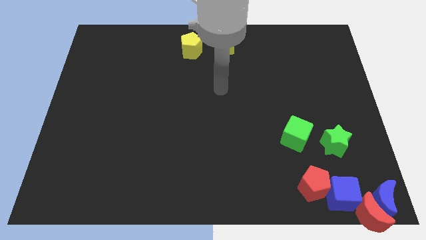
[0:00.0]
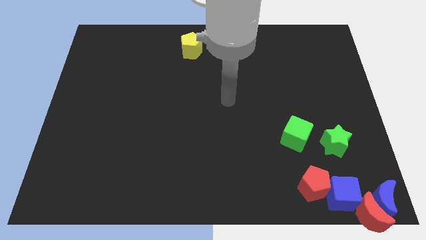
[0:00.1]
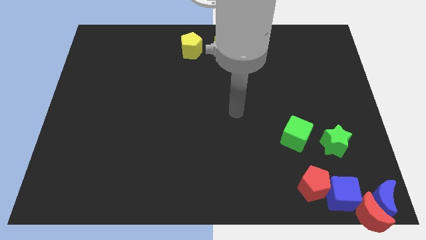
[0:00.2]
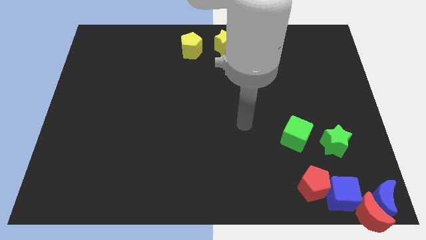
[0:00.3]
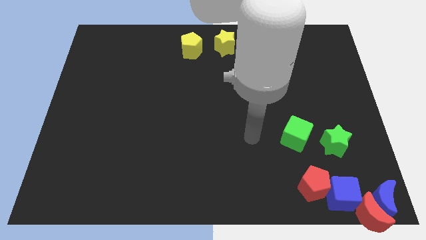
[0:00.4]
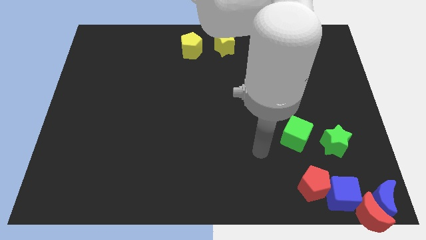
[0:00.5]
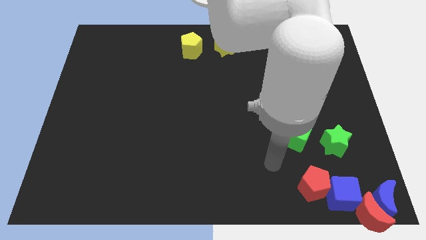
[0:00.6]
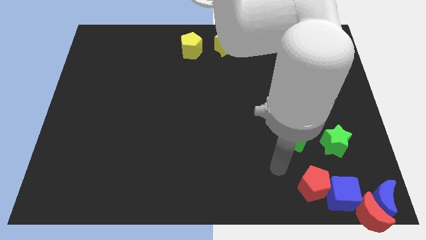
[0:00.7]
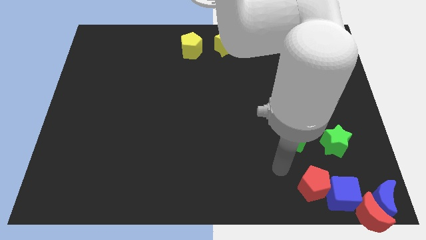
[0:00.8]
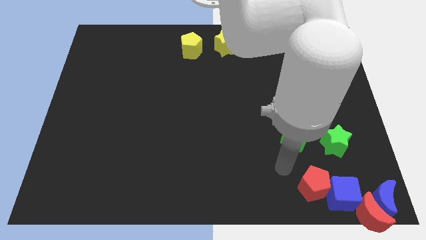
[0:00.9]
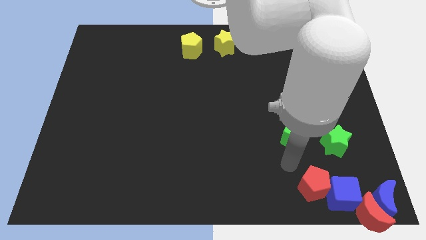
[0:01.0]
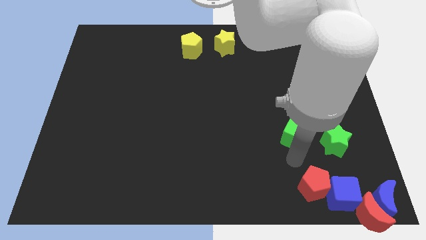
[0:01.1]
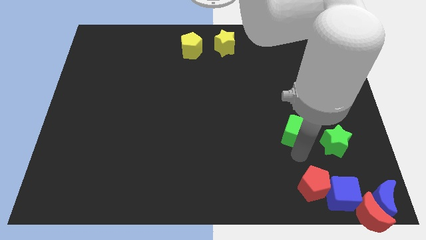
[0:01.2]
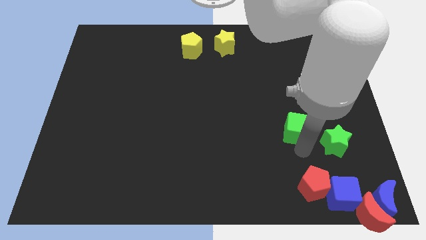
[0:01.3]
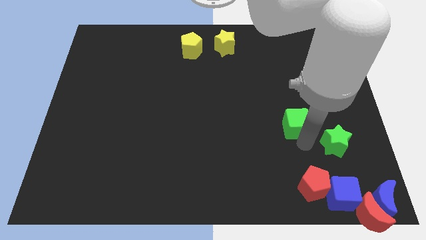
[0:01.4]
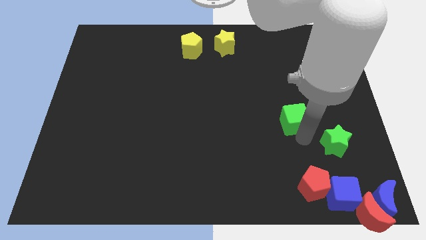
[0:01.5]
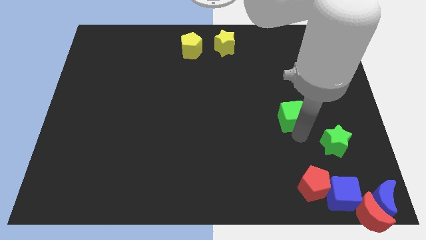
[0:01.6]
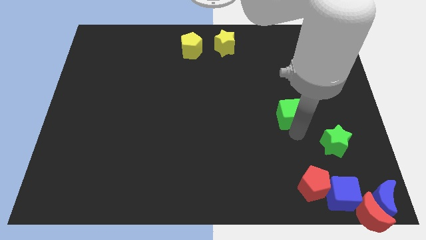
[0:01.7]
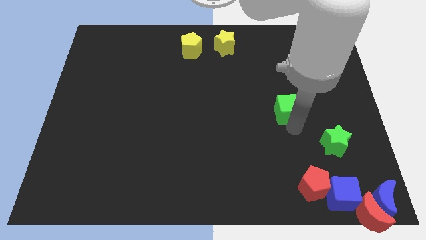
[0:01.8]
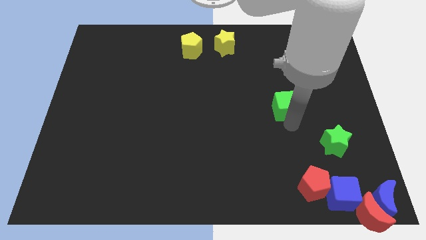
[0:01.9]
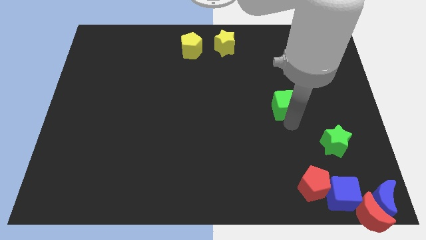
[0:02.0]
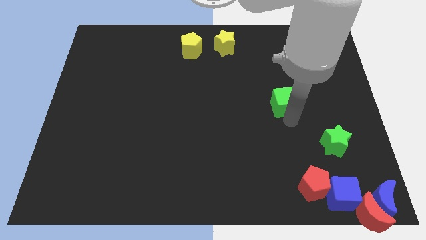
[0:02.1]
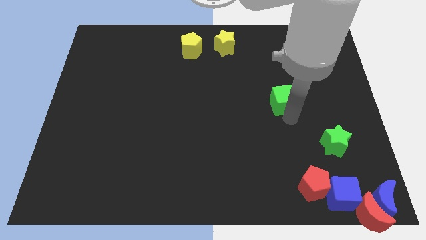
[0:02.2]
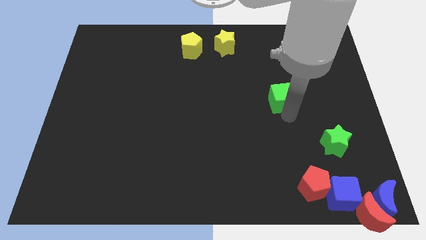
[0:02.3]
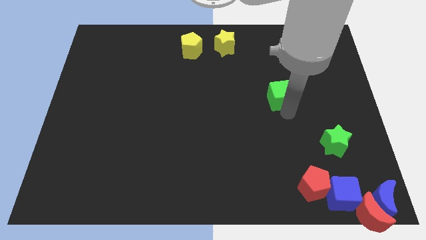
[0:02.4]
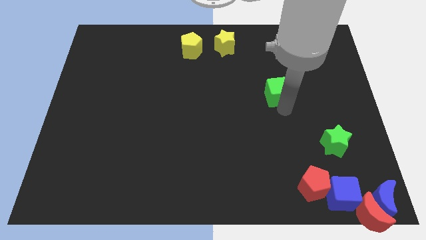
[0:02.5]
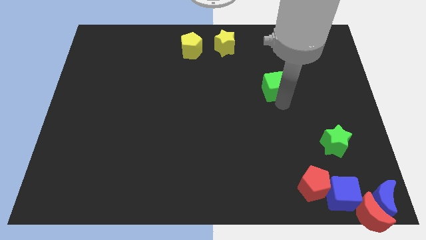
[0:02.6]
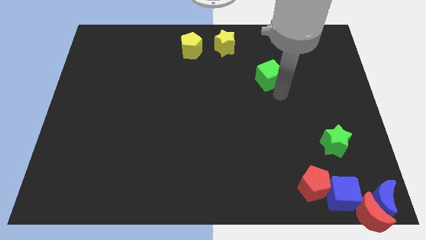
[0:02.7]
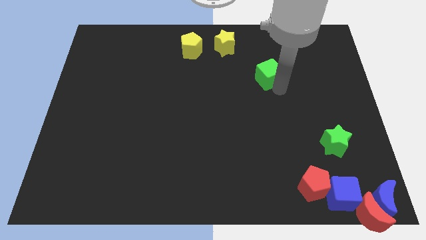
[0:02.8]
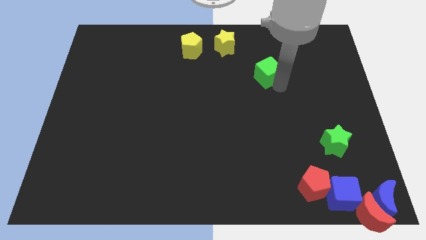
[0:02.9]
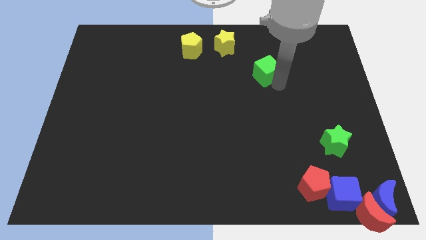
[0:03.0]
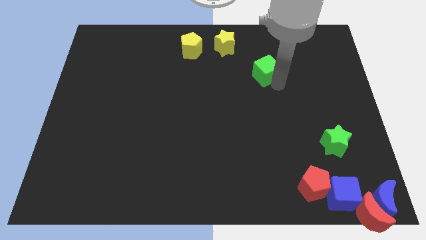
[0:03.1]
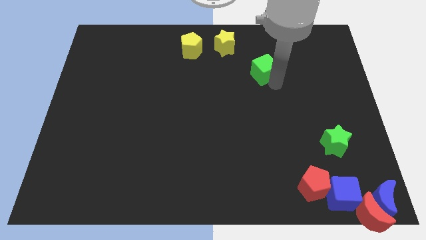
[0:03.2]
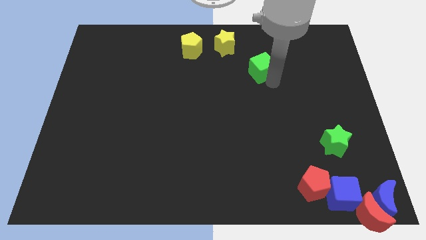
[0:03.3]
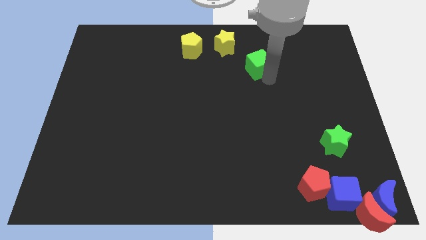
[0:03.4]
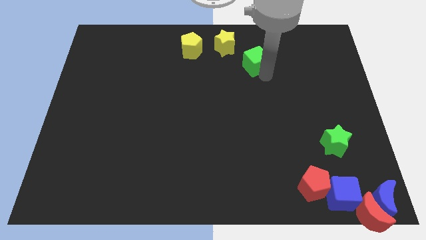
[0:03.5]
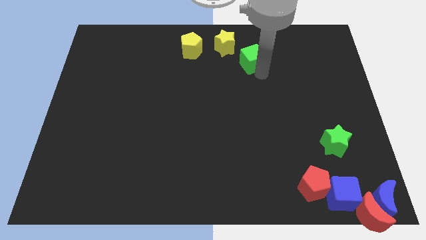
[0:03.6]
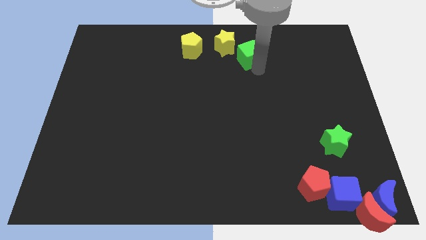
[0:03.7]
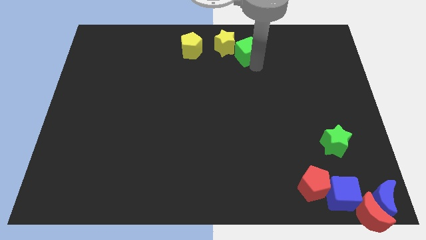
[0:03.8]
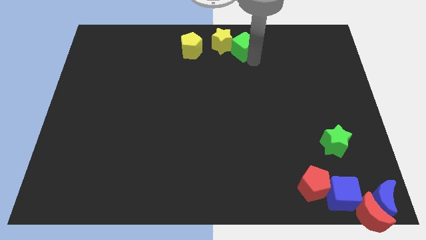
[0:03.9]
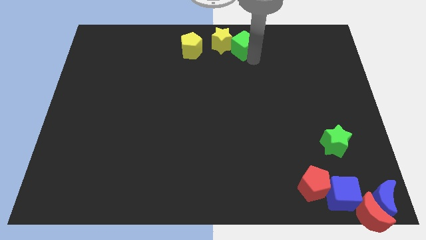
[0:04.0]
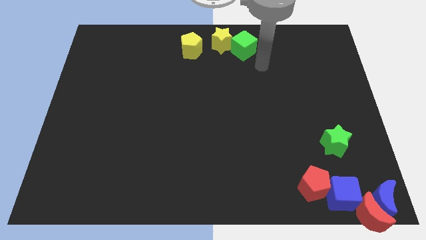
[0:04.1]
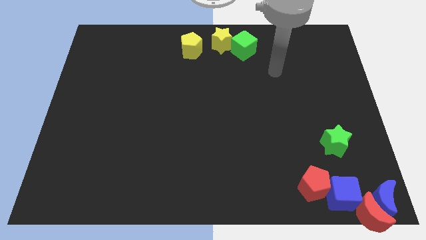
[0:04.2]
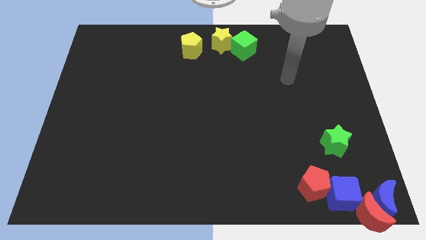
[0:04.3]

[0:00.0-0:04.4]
push the green cube into the yellow star

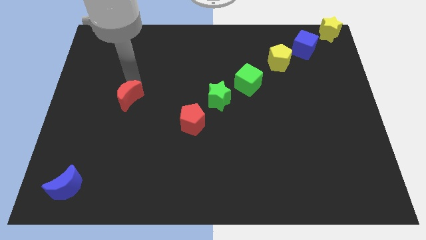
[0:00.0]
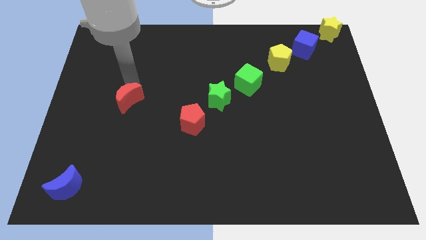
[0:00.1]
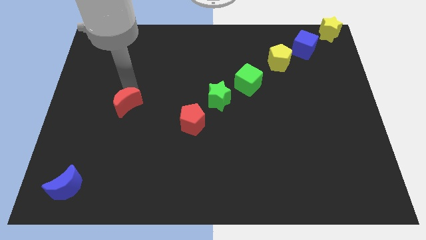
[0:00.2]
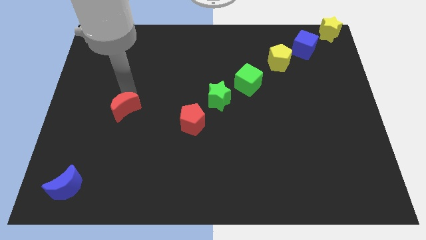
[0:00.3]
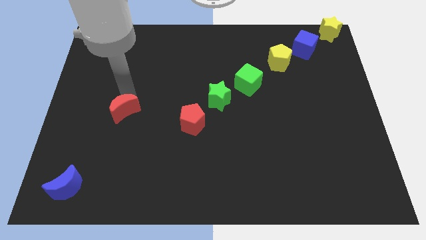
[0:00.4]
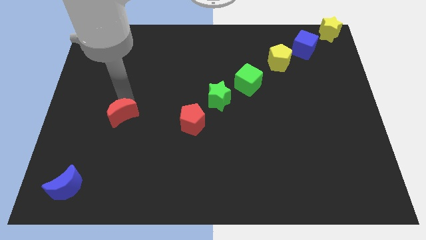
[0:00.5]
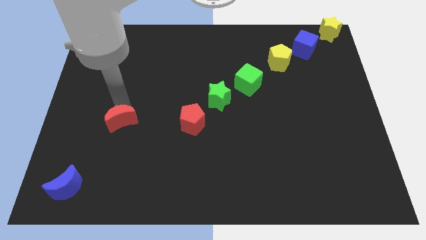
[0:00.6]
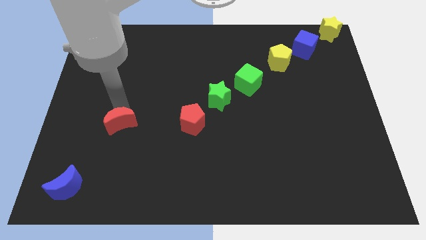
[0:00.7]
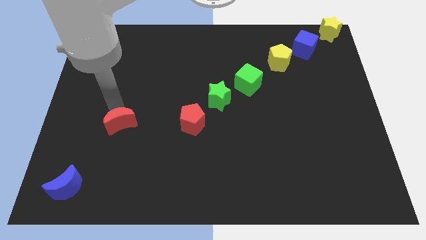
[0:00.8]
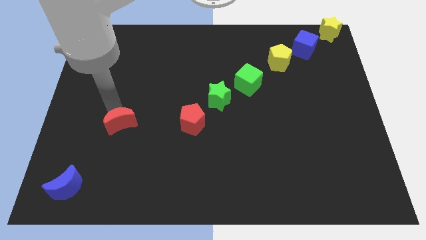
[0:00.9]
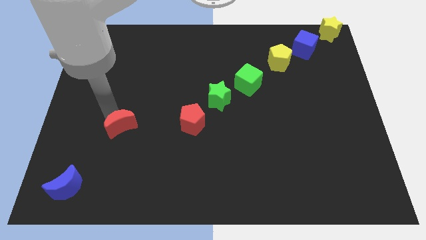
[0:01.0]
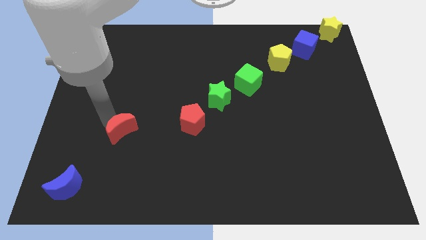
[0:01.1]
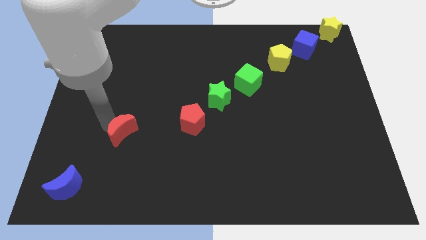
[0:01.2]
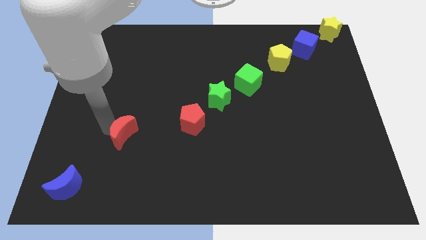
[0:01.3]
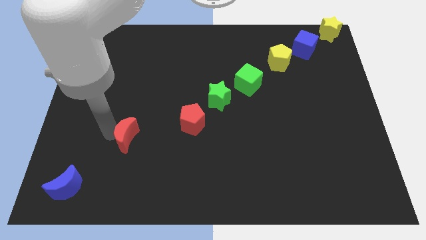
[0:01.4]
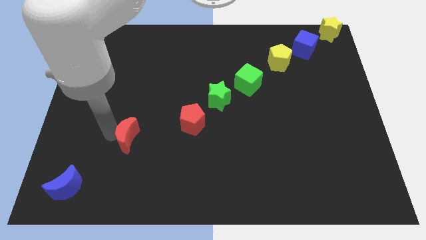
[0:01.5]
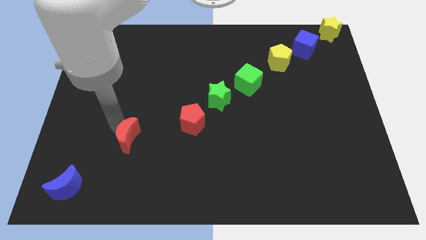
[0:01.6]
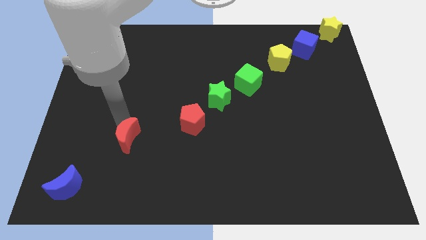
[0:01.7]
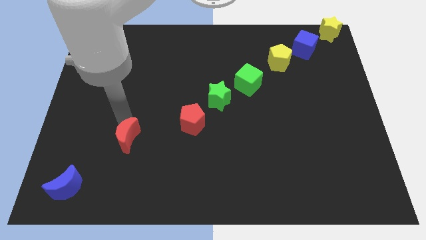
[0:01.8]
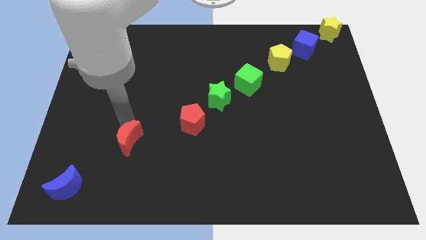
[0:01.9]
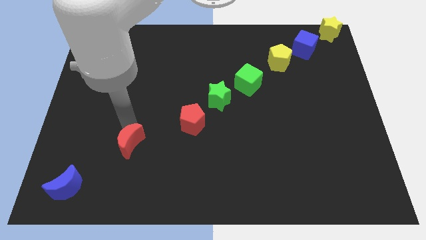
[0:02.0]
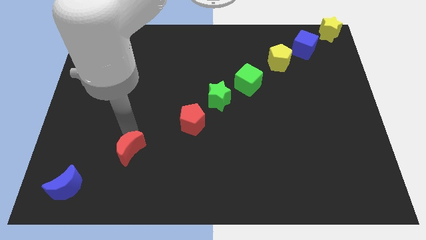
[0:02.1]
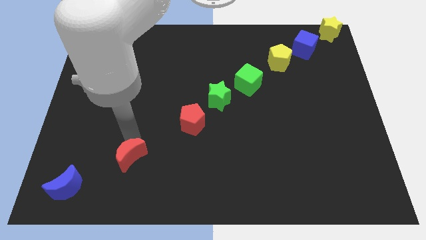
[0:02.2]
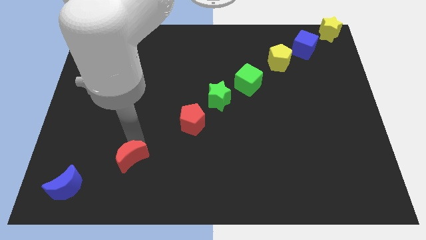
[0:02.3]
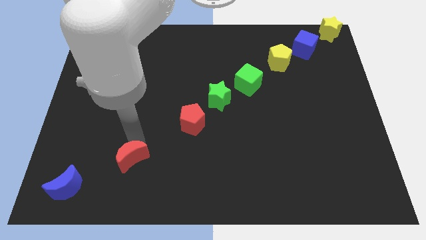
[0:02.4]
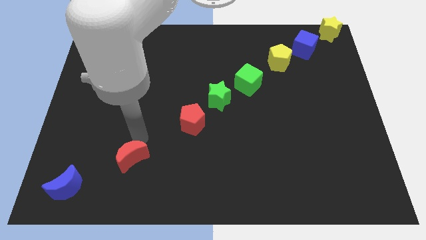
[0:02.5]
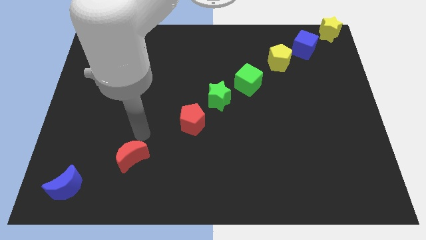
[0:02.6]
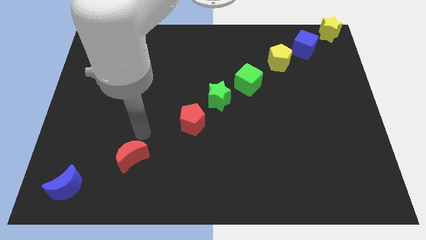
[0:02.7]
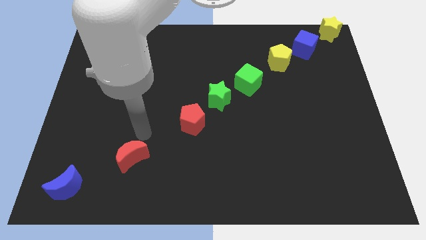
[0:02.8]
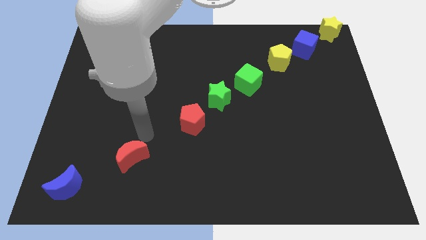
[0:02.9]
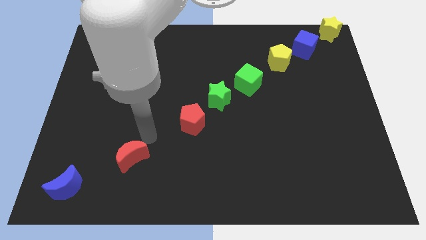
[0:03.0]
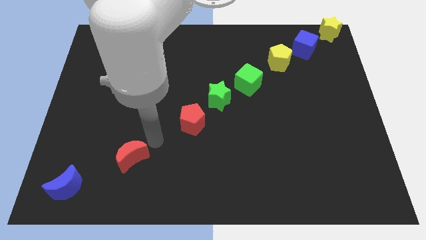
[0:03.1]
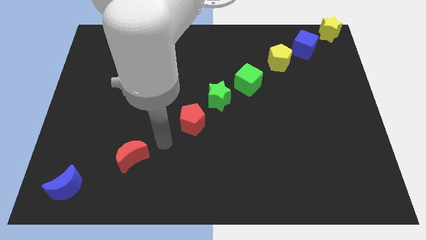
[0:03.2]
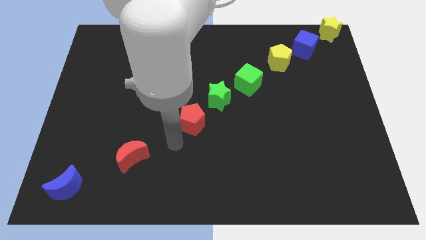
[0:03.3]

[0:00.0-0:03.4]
push red crescent in between blue crescent and red pentagon

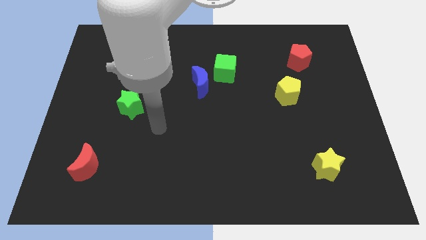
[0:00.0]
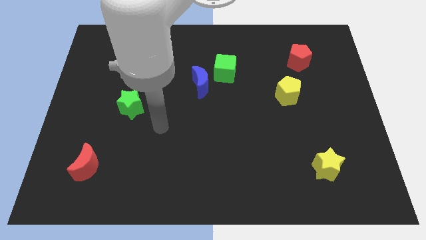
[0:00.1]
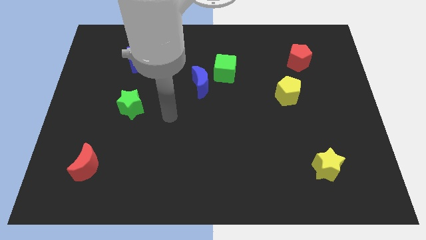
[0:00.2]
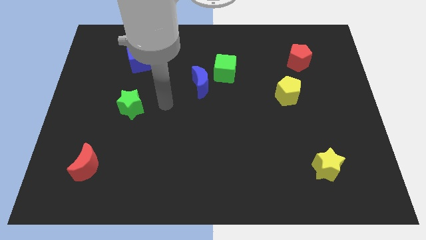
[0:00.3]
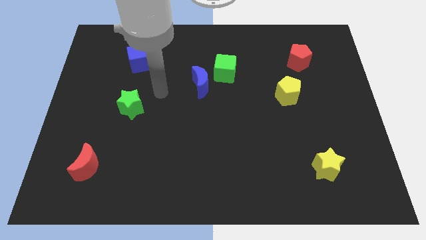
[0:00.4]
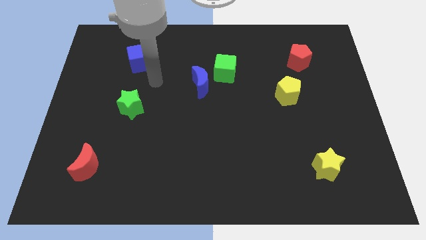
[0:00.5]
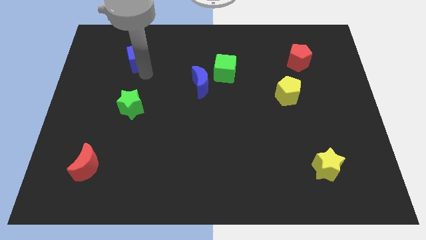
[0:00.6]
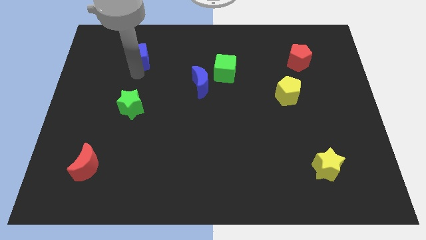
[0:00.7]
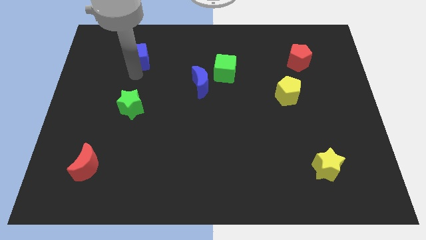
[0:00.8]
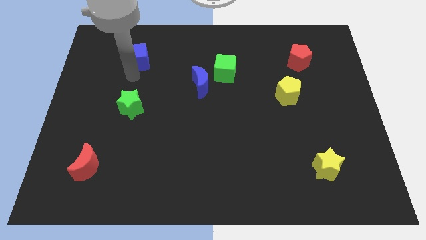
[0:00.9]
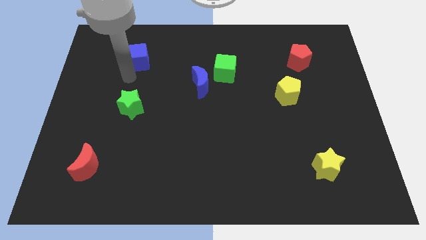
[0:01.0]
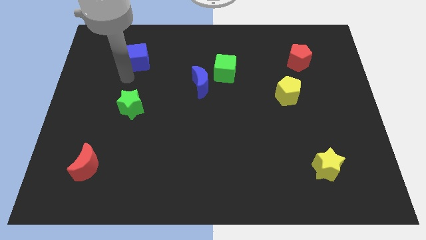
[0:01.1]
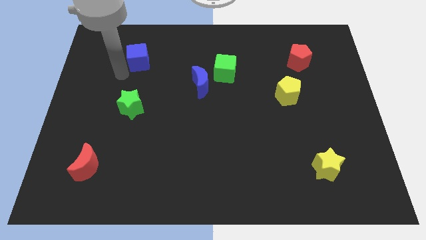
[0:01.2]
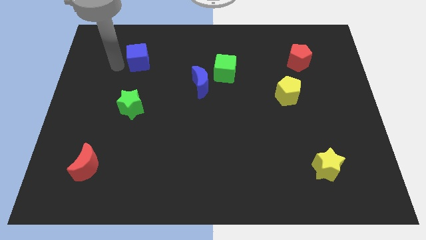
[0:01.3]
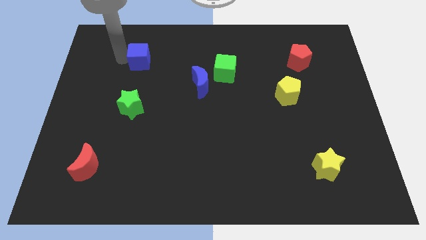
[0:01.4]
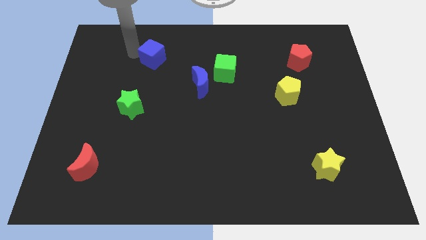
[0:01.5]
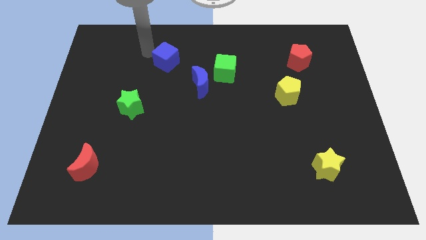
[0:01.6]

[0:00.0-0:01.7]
move your arm close to the blue cube
